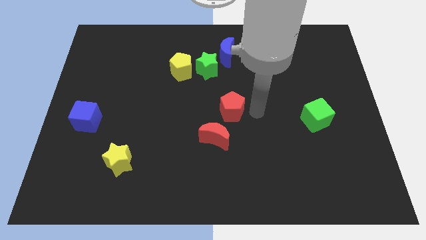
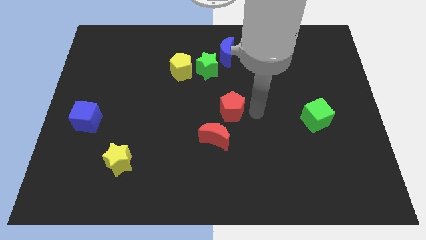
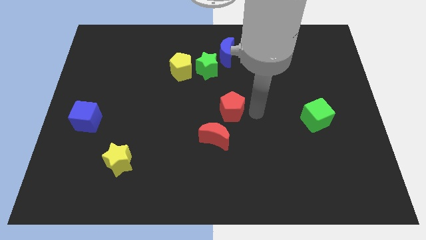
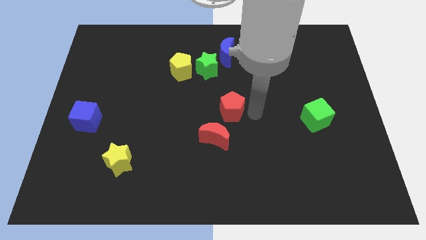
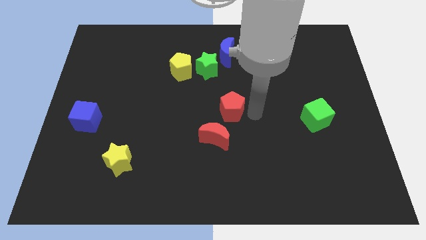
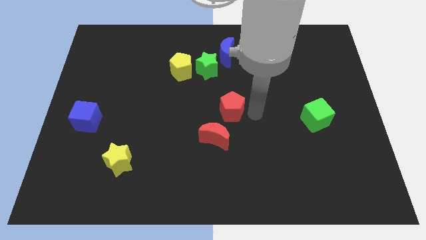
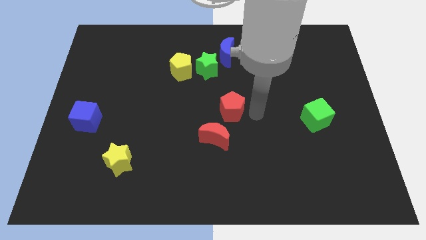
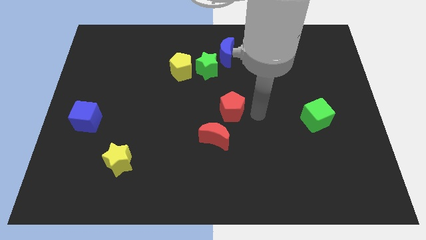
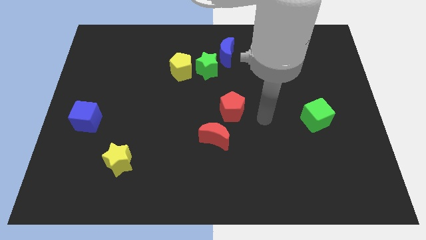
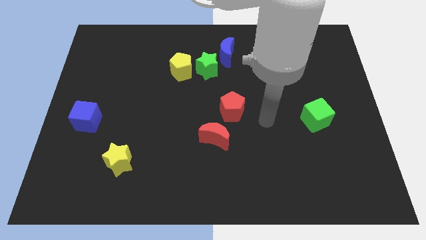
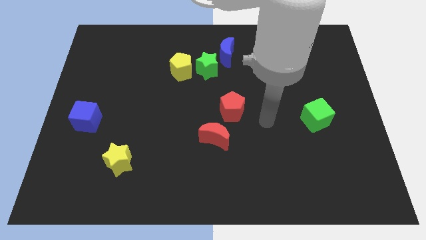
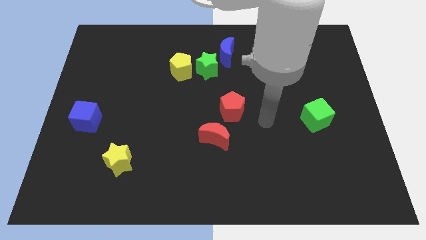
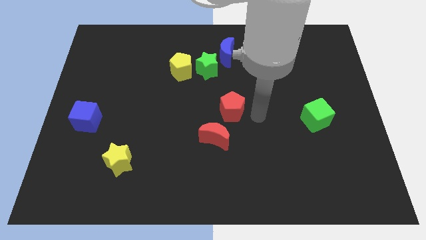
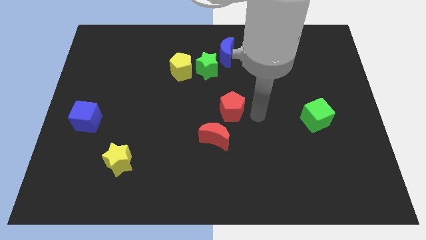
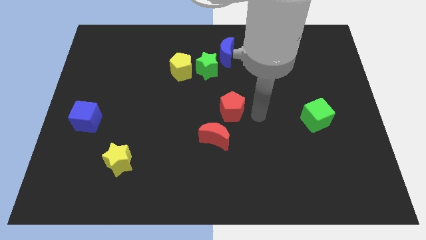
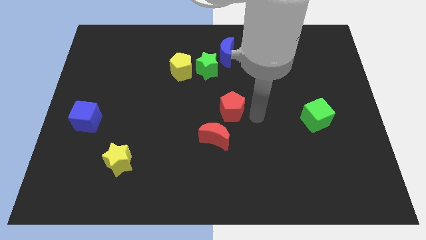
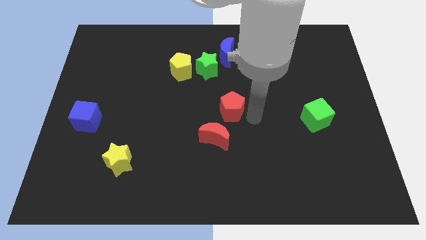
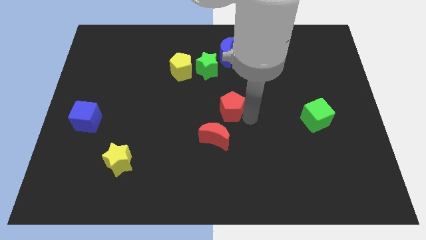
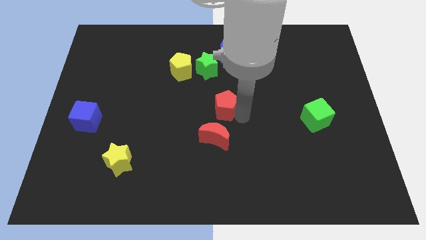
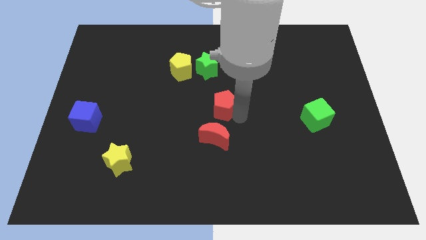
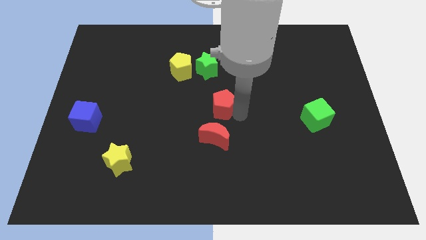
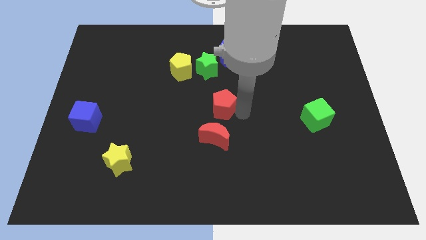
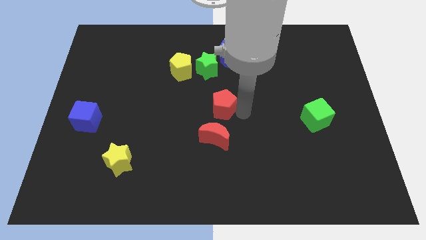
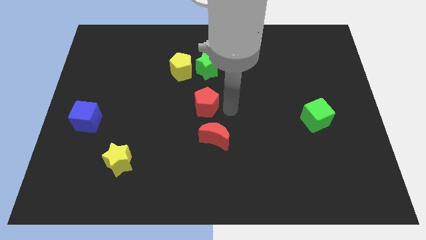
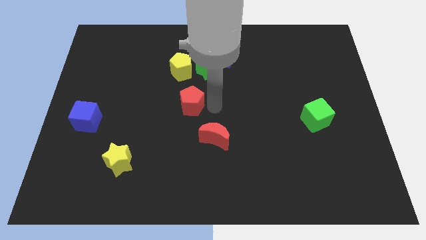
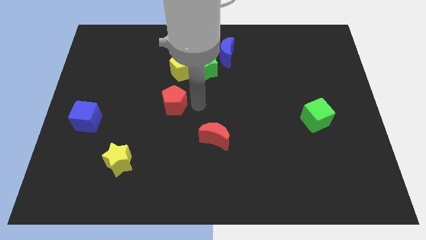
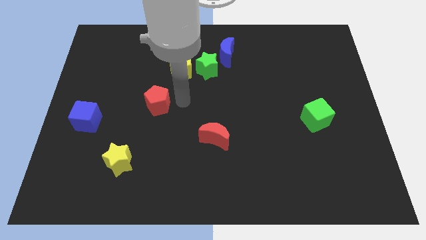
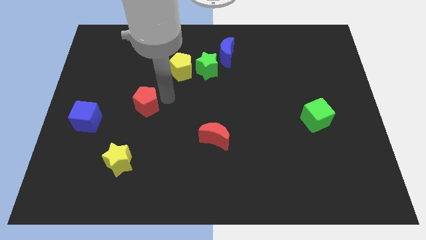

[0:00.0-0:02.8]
move the red pentagon towards blue cube

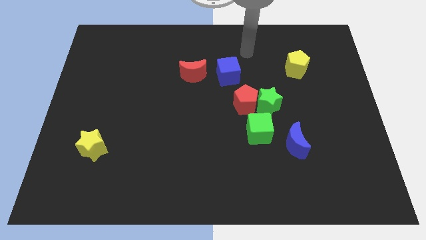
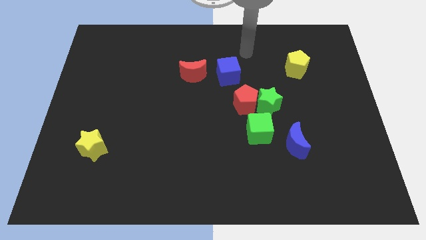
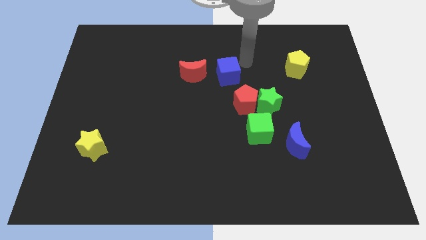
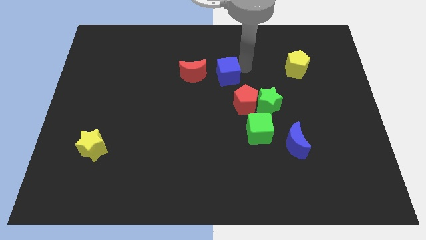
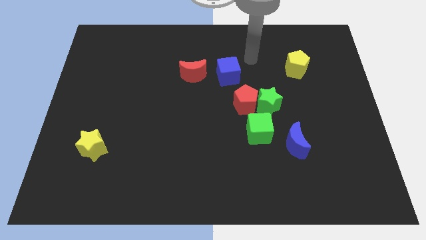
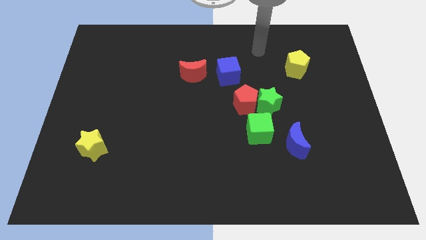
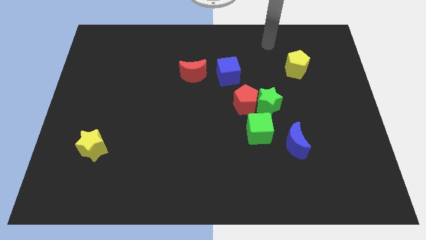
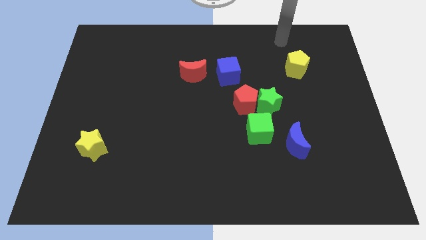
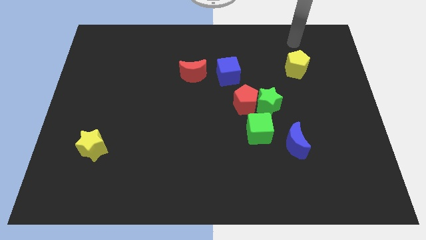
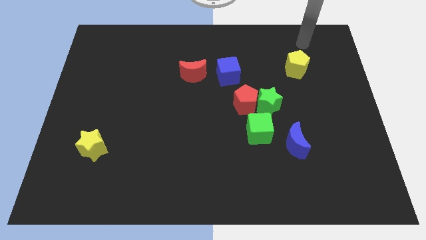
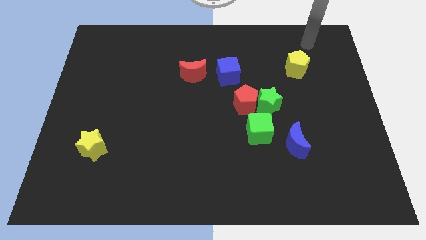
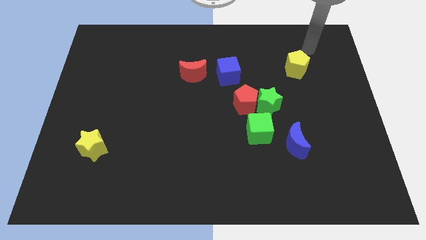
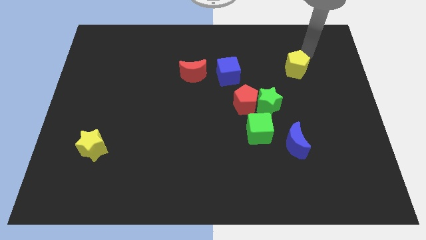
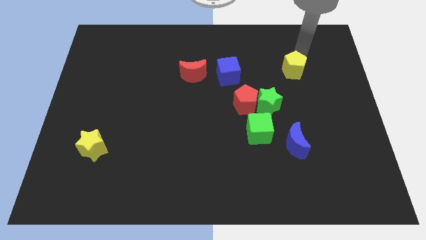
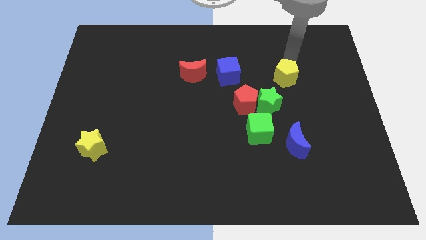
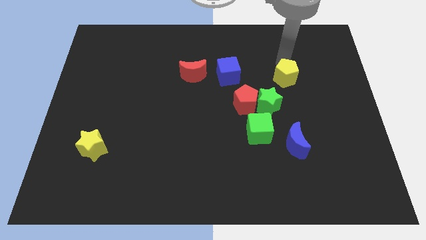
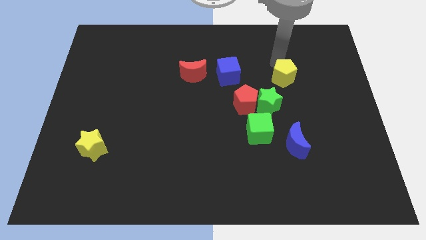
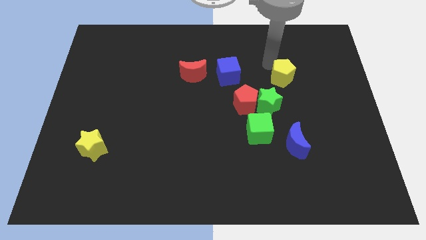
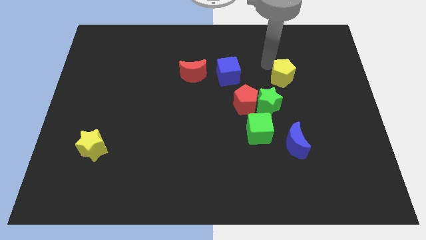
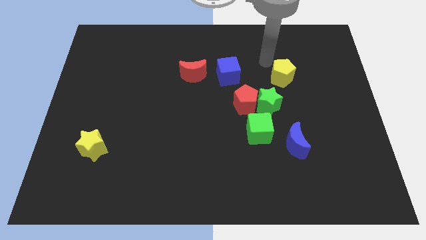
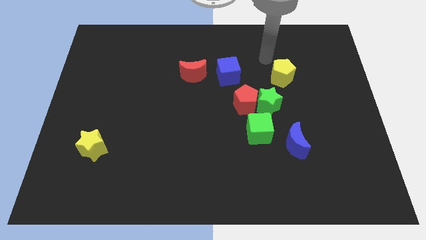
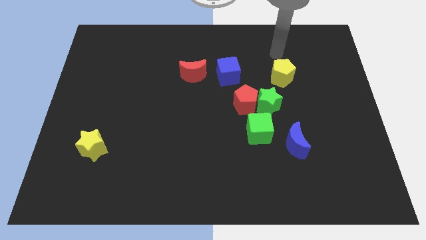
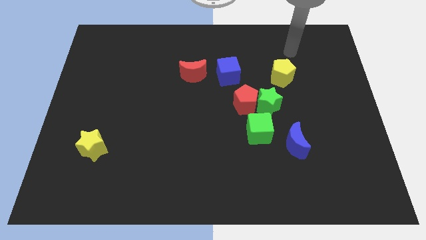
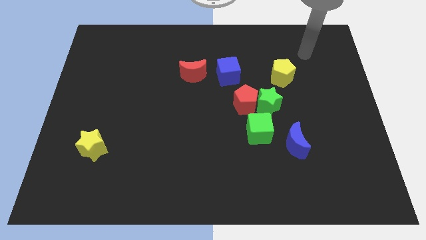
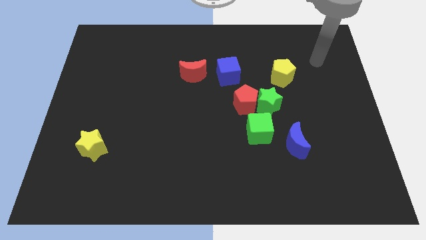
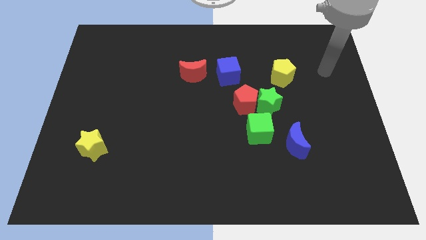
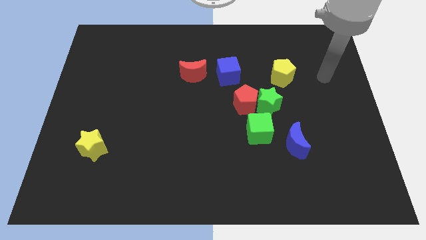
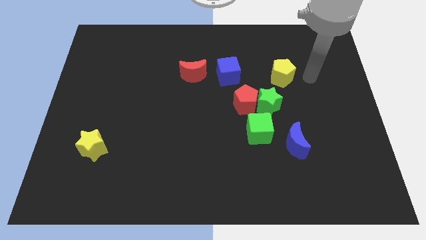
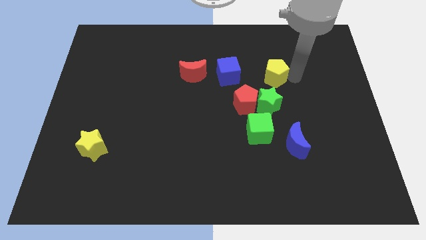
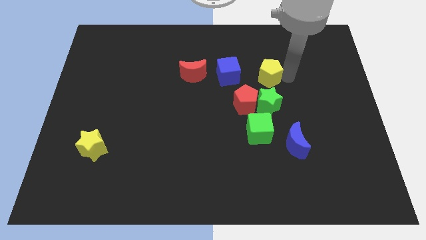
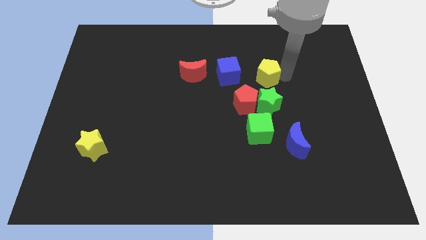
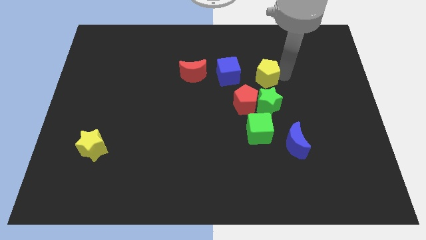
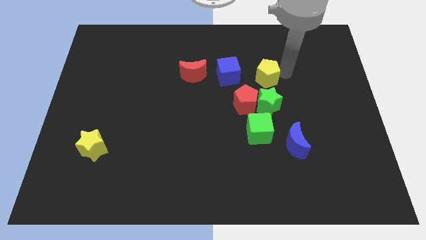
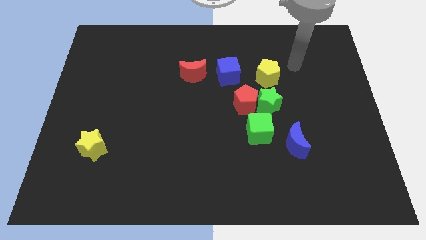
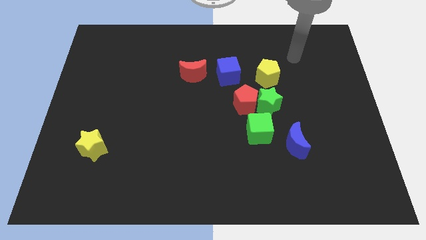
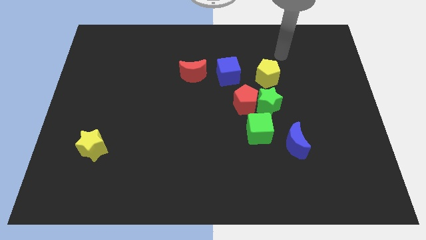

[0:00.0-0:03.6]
push the yellow pentagon at the top side of the green star

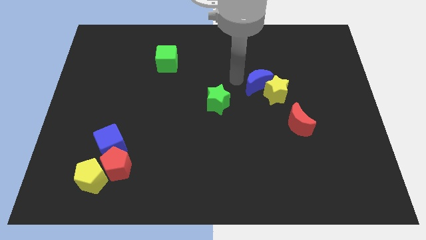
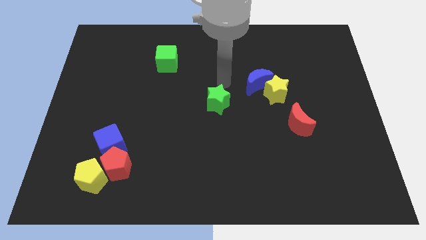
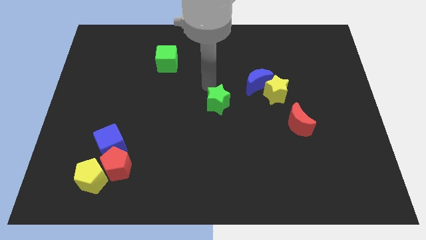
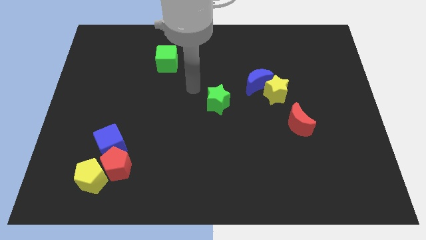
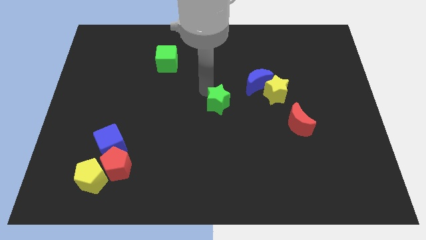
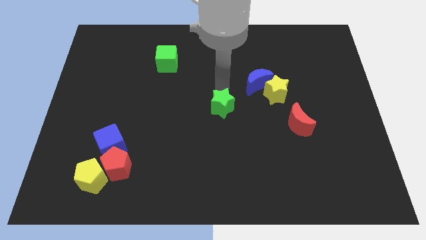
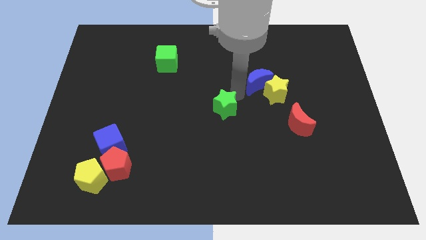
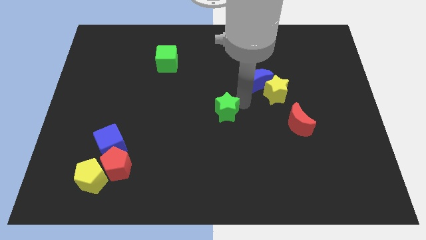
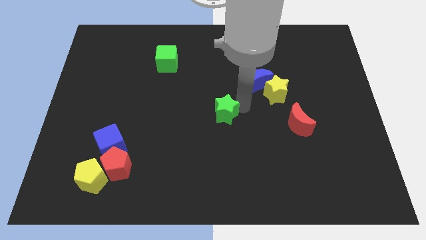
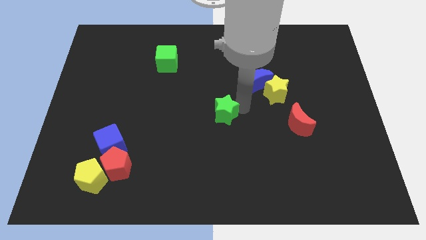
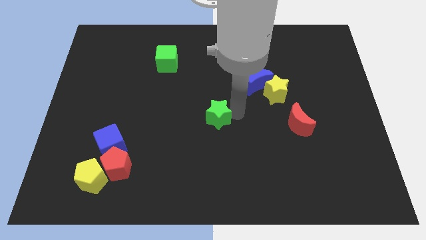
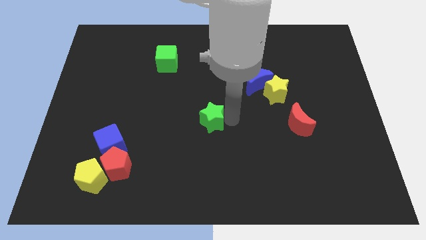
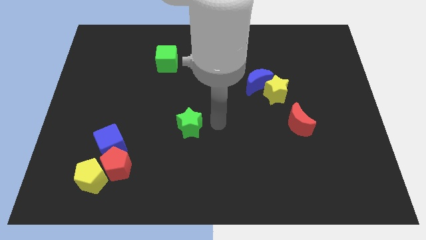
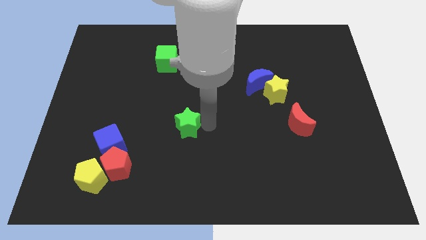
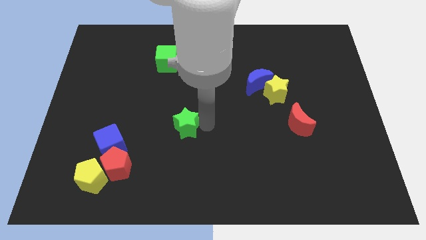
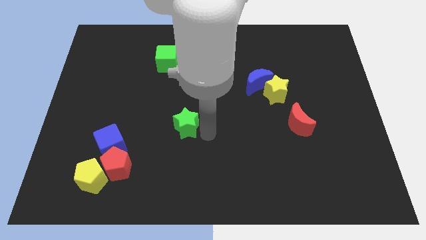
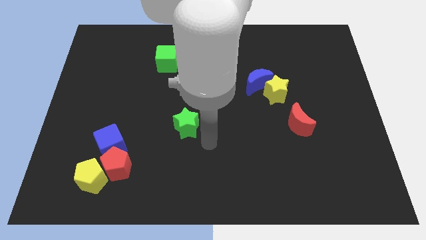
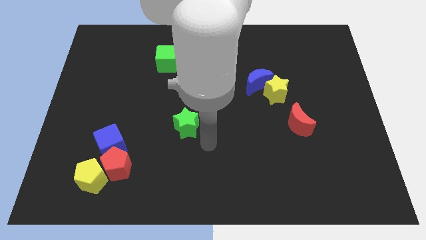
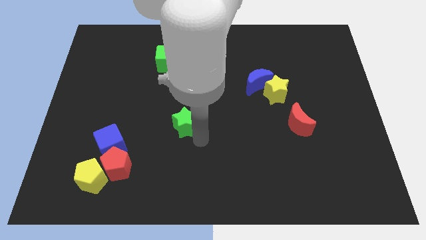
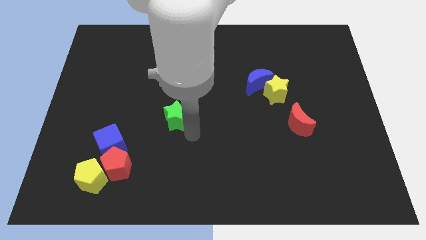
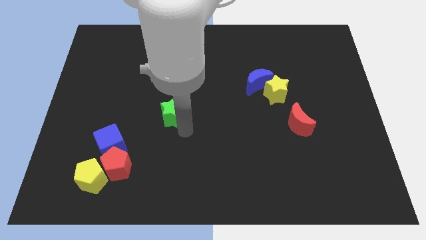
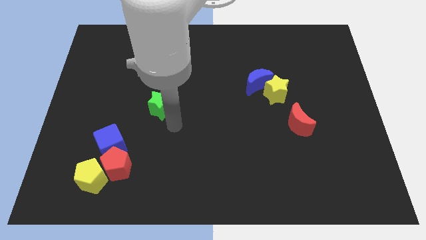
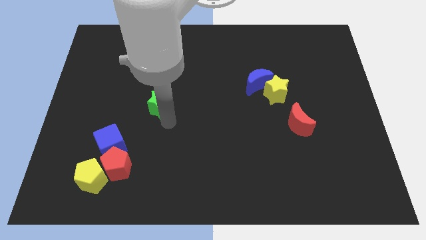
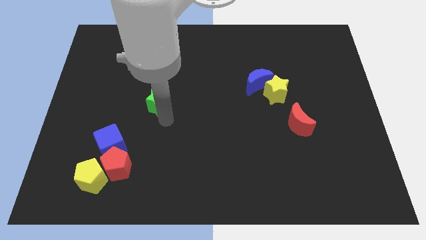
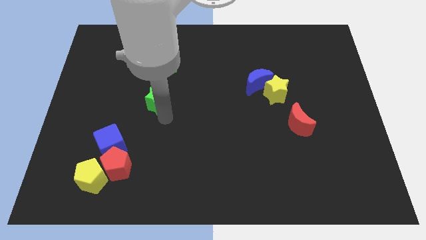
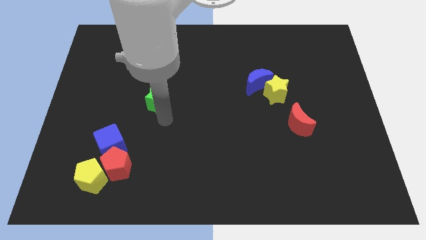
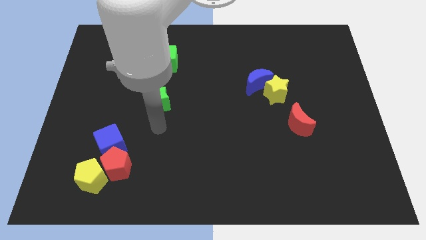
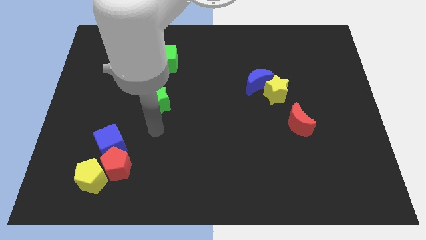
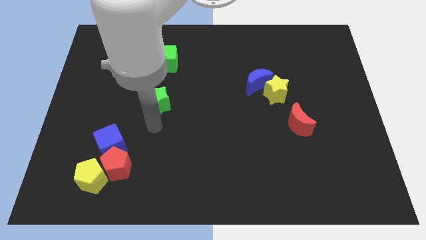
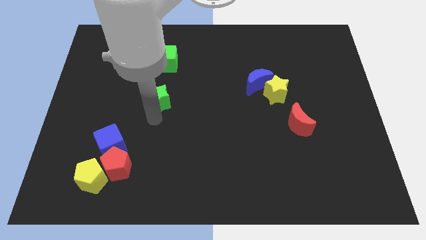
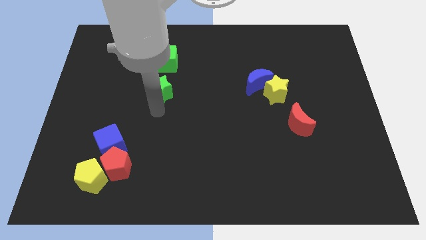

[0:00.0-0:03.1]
place the green star vertically below the green cube
